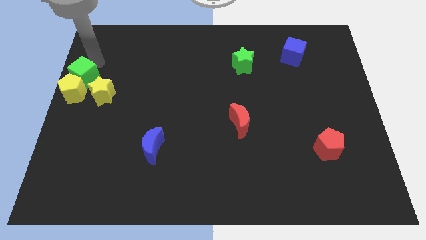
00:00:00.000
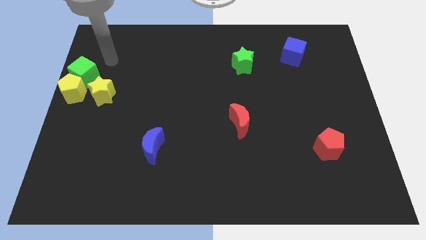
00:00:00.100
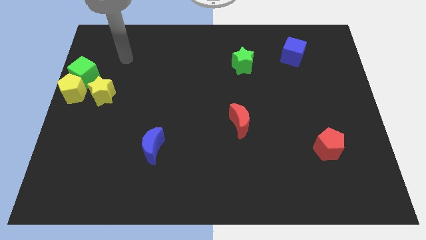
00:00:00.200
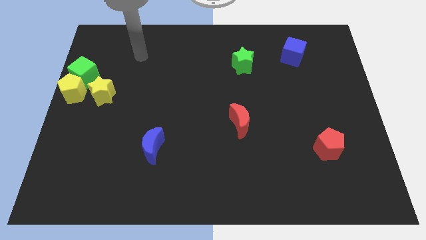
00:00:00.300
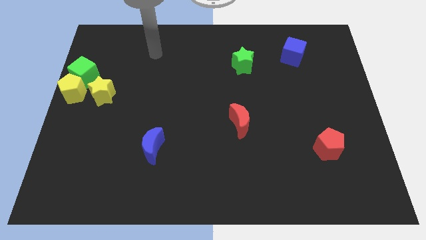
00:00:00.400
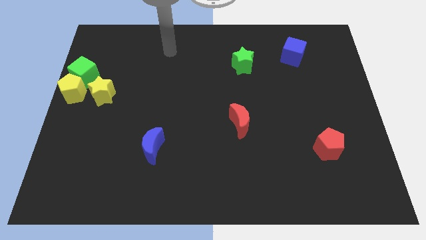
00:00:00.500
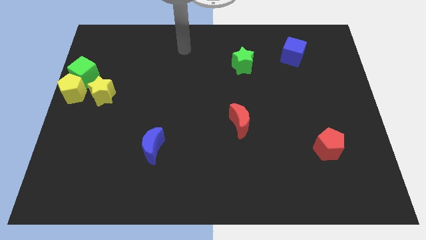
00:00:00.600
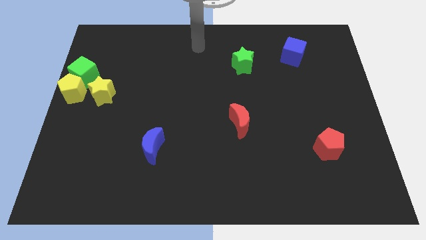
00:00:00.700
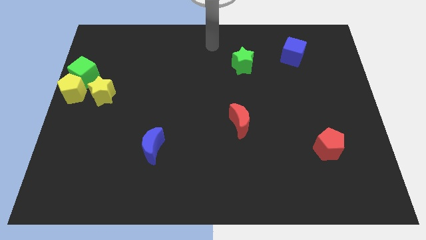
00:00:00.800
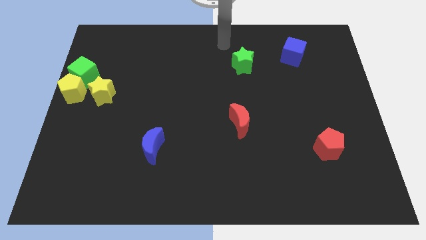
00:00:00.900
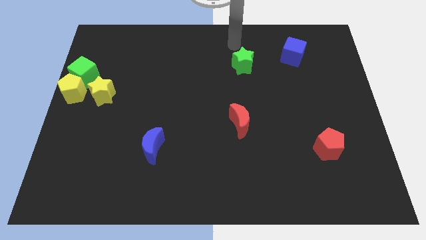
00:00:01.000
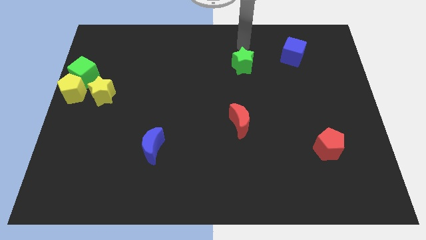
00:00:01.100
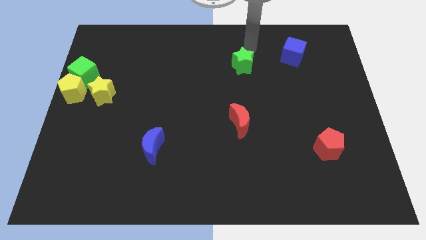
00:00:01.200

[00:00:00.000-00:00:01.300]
point at the top side of the green star

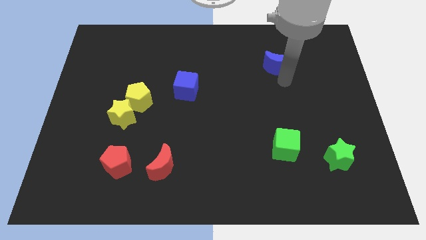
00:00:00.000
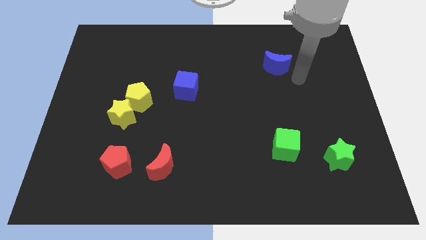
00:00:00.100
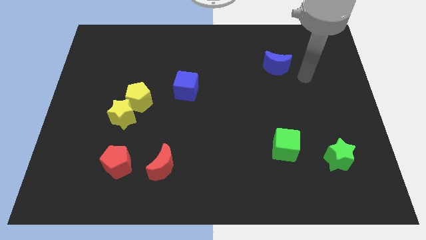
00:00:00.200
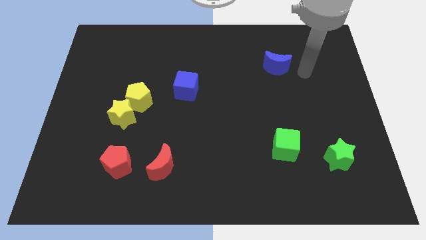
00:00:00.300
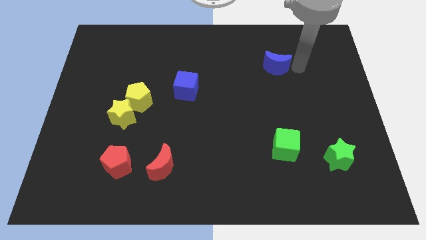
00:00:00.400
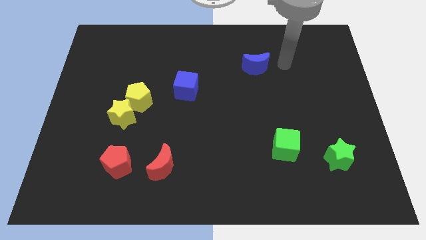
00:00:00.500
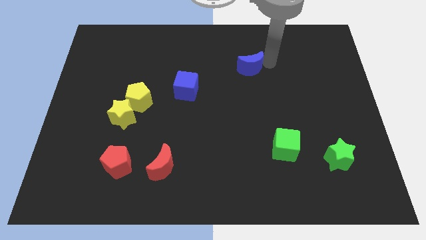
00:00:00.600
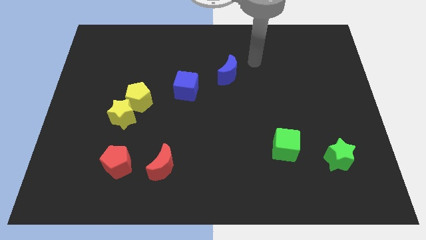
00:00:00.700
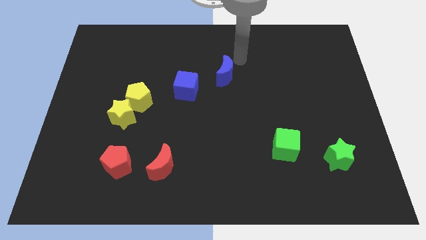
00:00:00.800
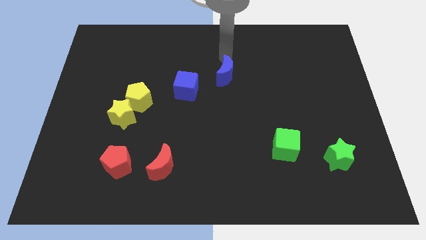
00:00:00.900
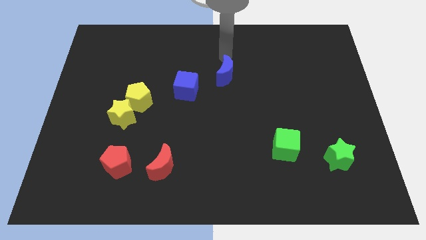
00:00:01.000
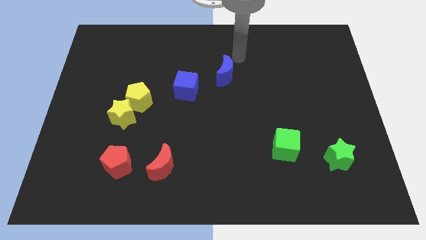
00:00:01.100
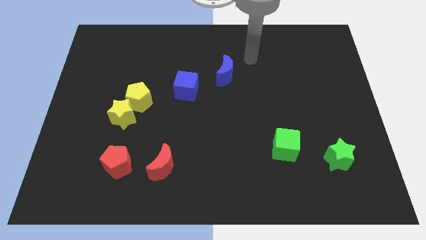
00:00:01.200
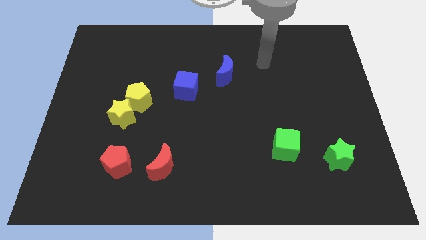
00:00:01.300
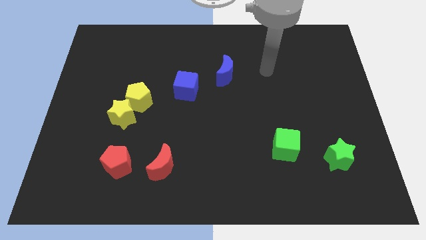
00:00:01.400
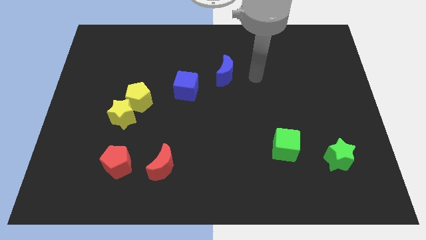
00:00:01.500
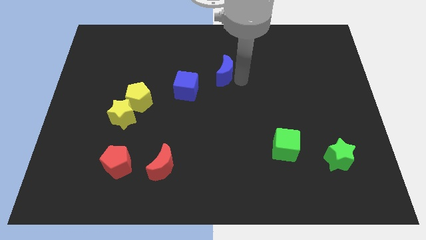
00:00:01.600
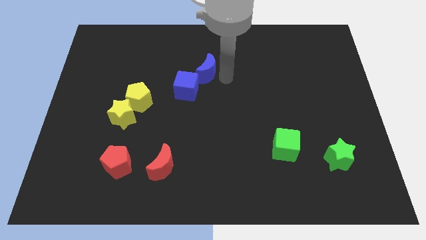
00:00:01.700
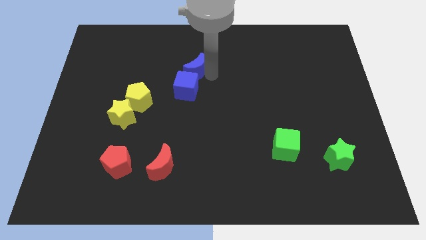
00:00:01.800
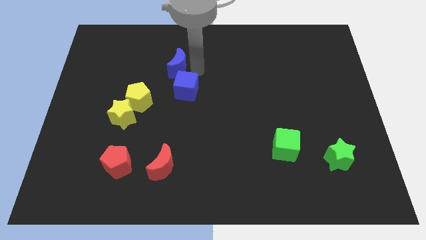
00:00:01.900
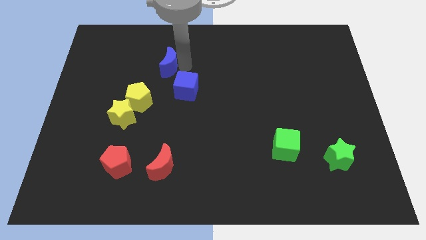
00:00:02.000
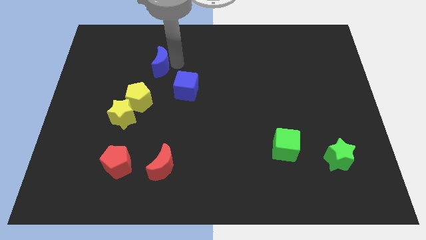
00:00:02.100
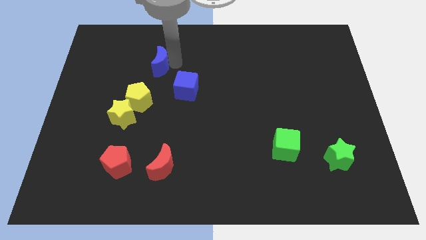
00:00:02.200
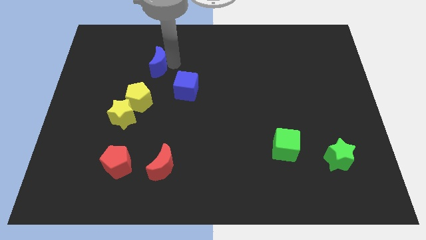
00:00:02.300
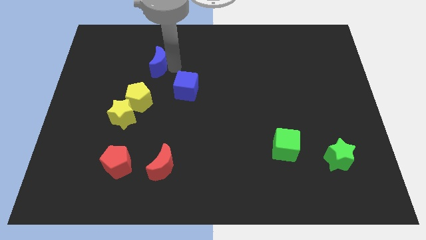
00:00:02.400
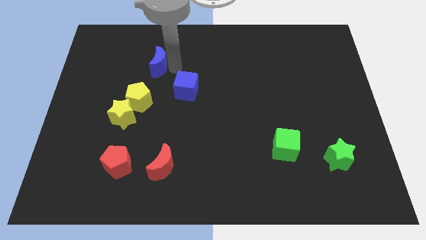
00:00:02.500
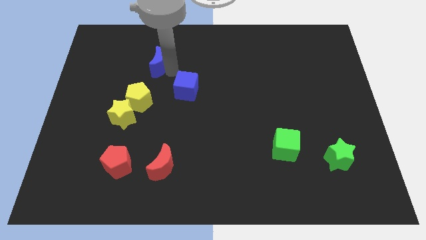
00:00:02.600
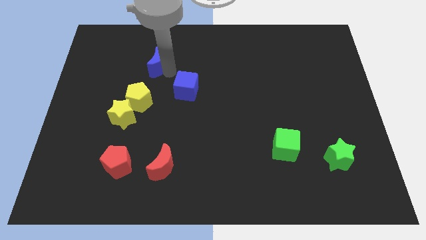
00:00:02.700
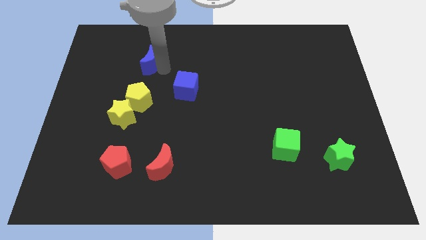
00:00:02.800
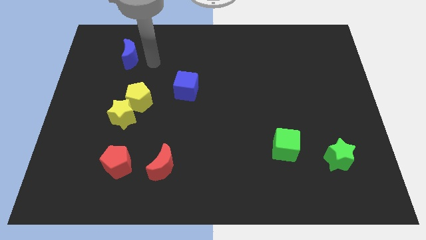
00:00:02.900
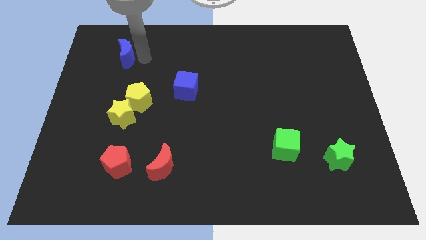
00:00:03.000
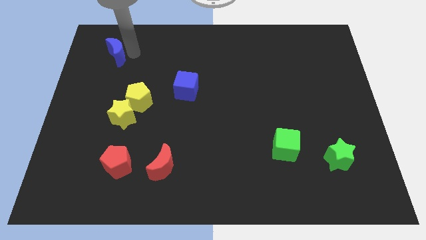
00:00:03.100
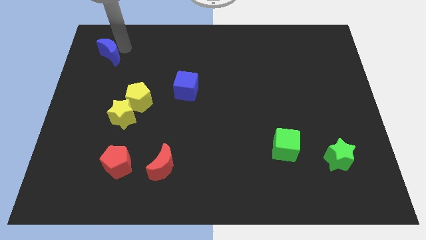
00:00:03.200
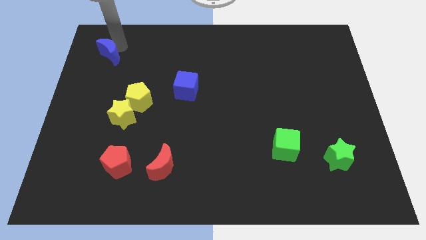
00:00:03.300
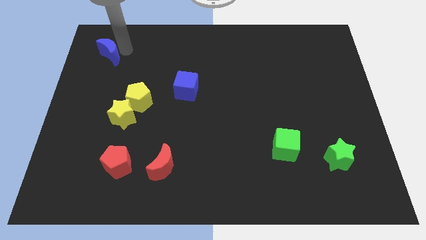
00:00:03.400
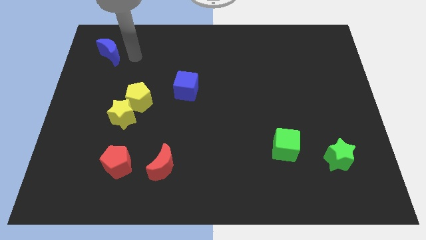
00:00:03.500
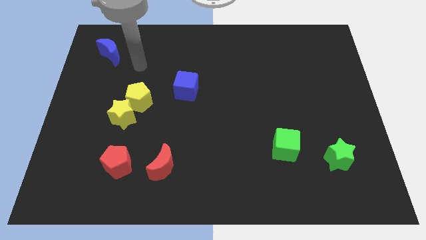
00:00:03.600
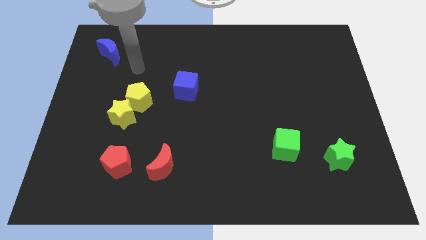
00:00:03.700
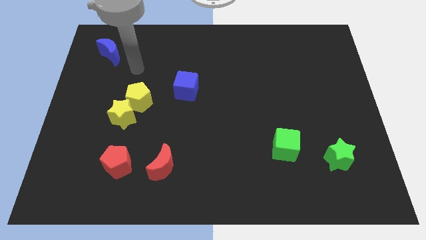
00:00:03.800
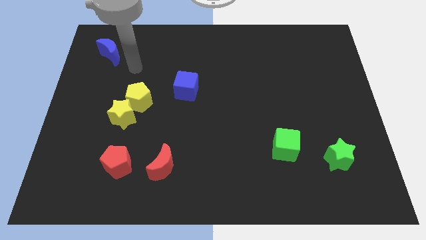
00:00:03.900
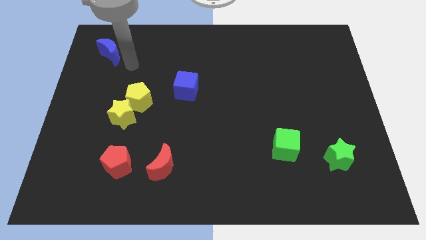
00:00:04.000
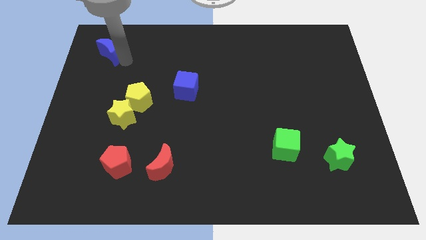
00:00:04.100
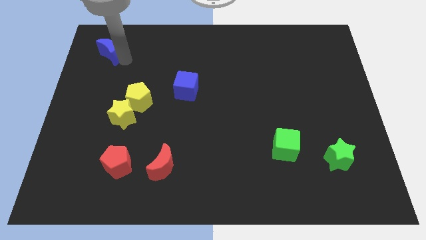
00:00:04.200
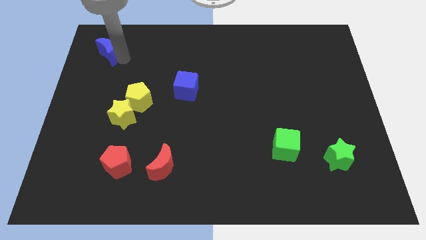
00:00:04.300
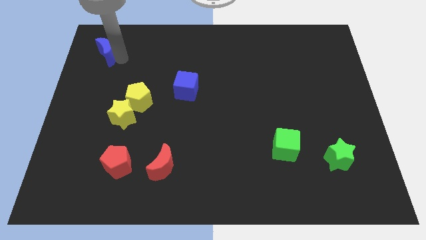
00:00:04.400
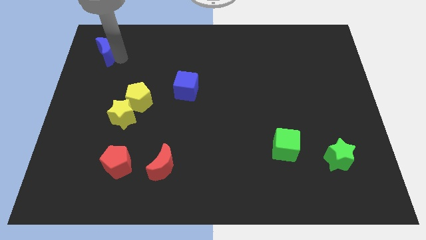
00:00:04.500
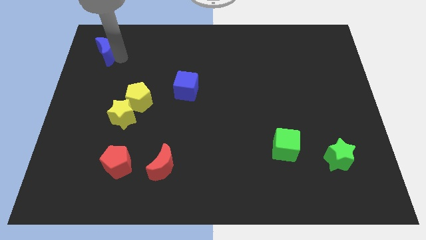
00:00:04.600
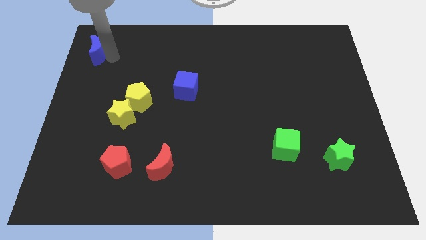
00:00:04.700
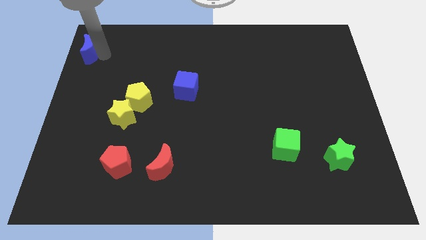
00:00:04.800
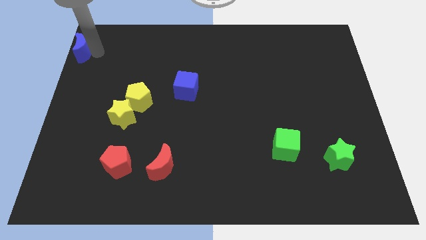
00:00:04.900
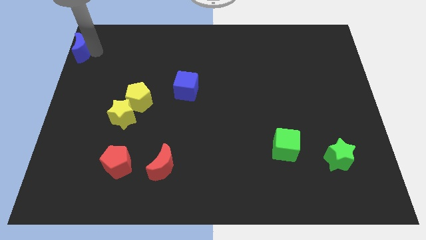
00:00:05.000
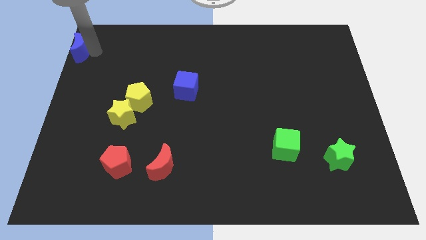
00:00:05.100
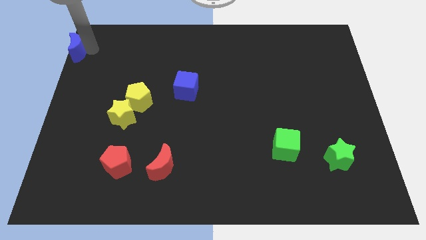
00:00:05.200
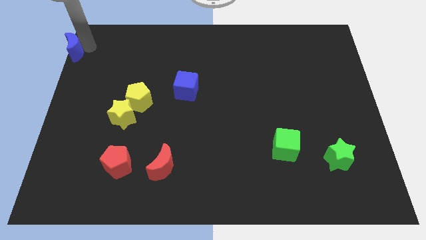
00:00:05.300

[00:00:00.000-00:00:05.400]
push blue moon to the top left corner of the board

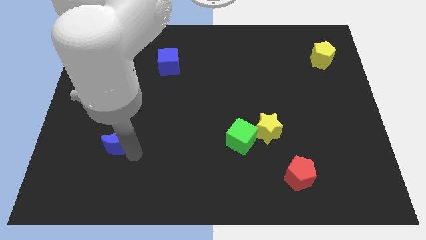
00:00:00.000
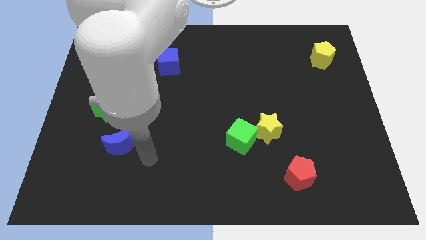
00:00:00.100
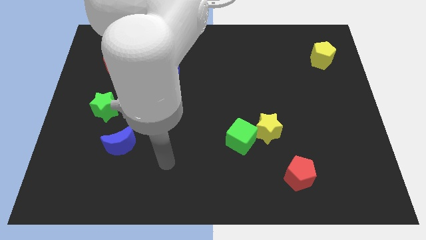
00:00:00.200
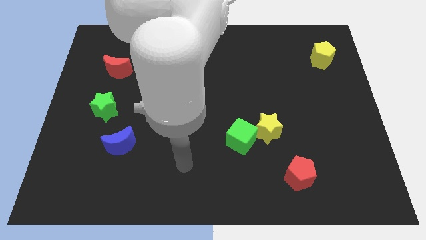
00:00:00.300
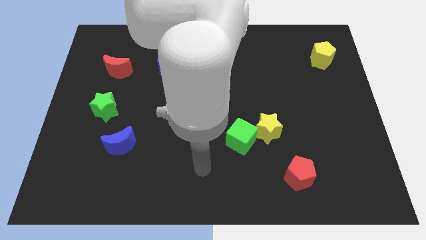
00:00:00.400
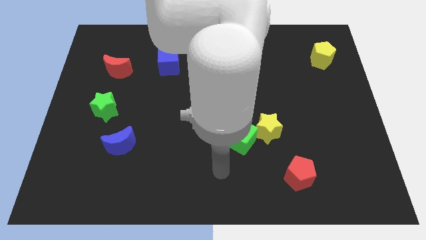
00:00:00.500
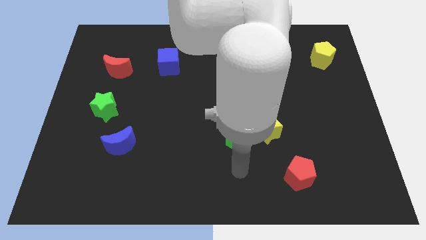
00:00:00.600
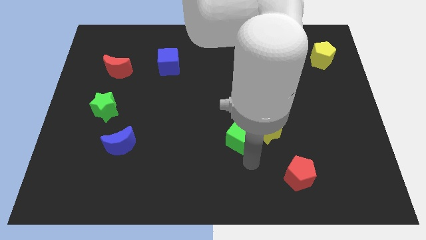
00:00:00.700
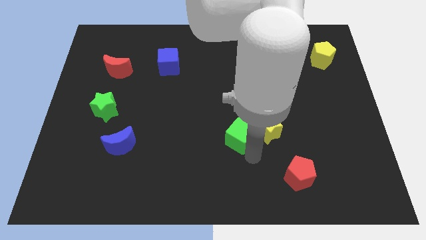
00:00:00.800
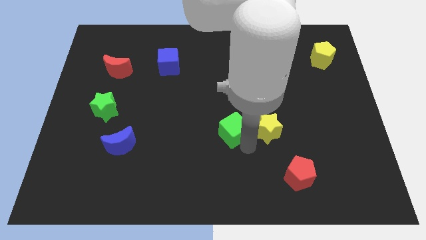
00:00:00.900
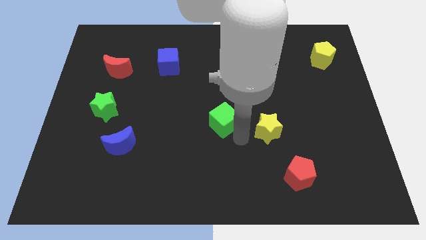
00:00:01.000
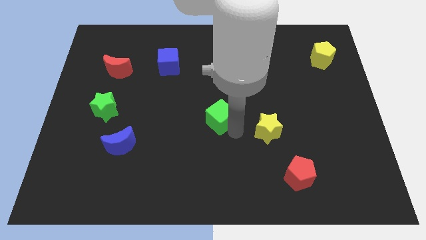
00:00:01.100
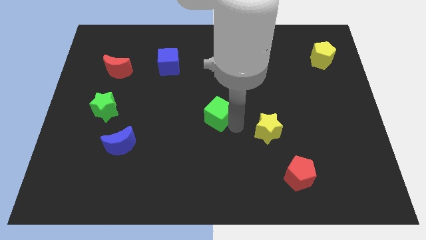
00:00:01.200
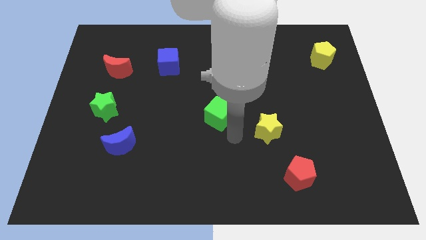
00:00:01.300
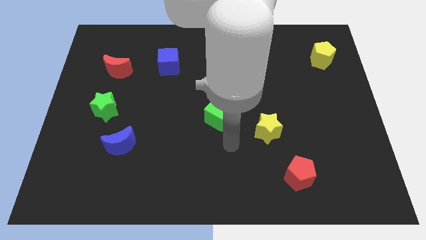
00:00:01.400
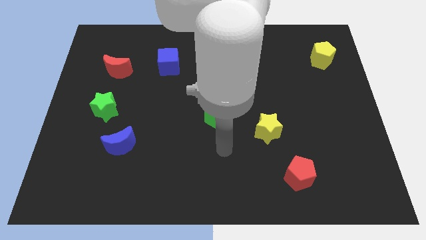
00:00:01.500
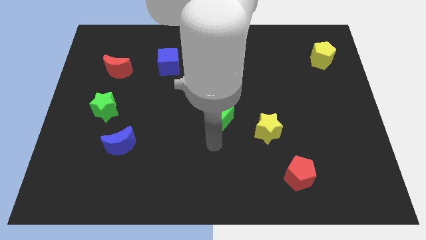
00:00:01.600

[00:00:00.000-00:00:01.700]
push the green cube towards the center of the board

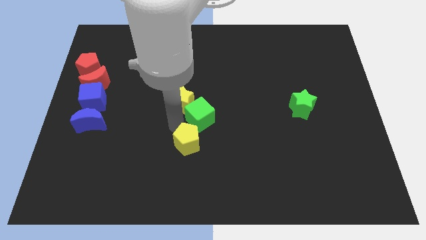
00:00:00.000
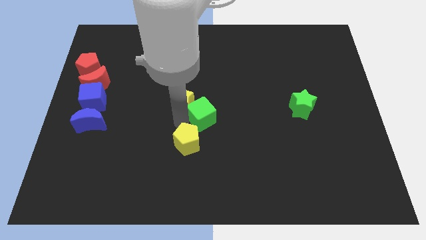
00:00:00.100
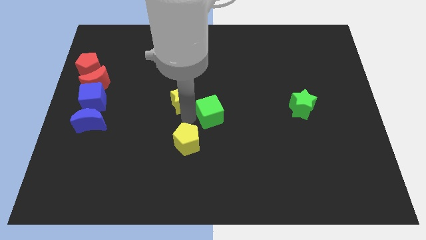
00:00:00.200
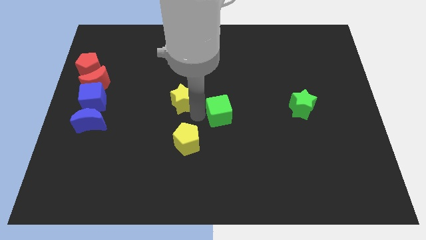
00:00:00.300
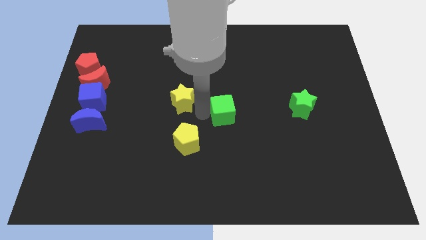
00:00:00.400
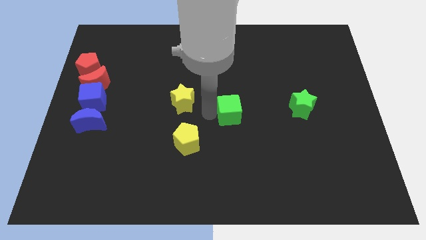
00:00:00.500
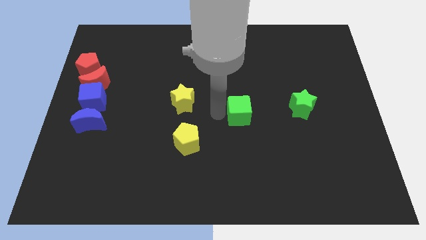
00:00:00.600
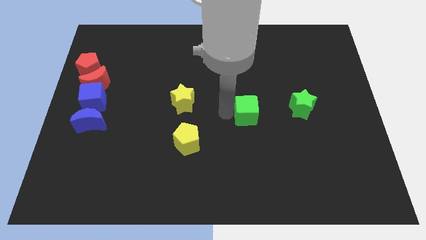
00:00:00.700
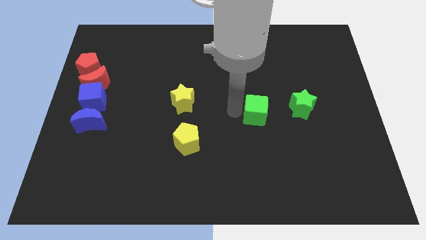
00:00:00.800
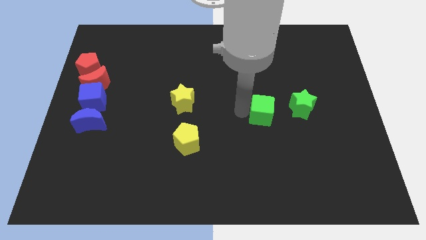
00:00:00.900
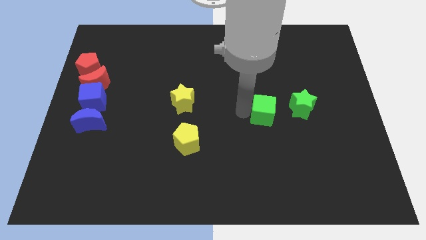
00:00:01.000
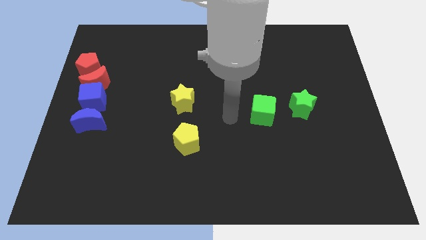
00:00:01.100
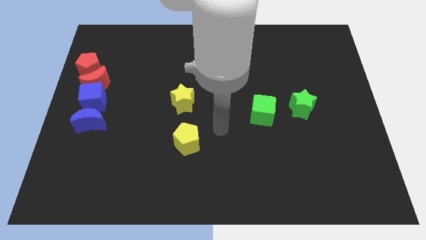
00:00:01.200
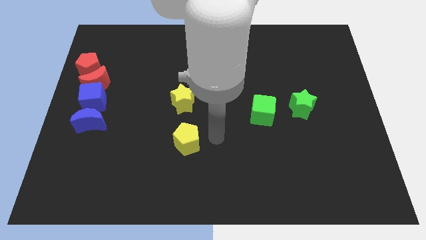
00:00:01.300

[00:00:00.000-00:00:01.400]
push the green cube to the left of the green star
